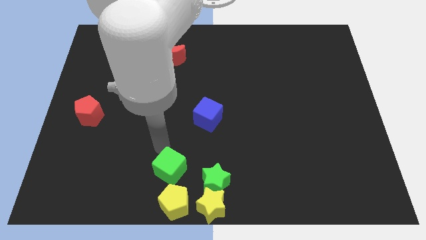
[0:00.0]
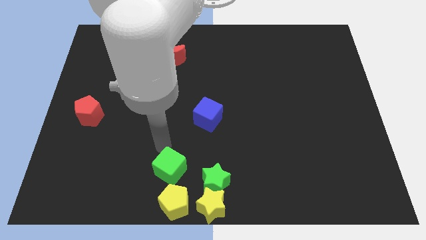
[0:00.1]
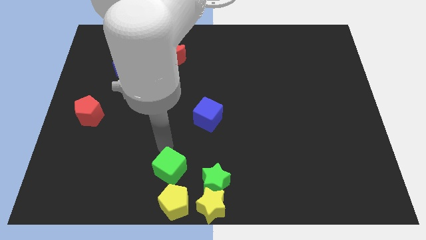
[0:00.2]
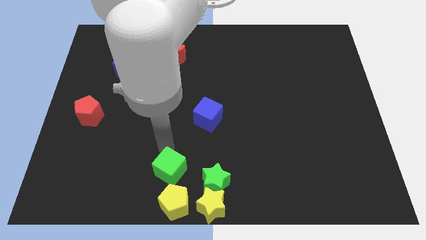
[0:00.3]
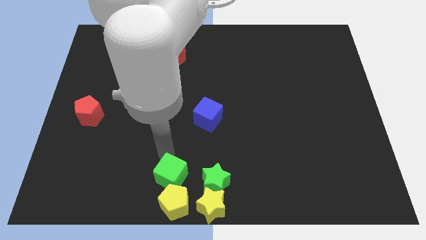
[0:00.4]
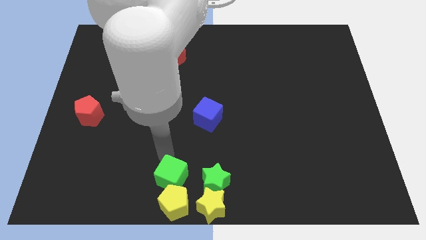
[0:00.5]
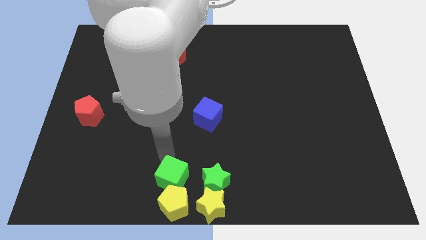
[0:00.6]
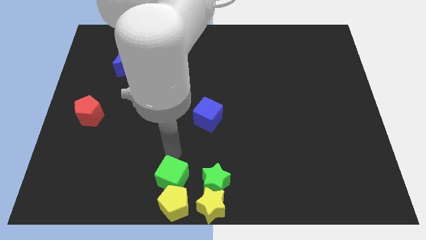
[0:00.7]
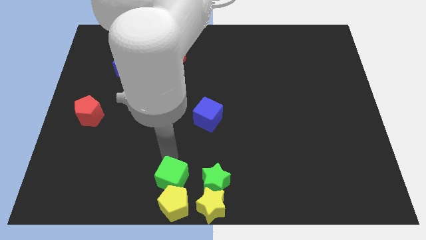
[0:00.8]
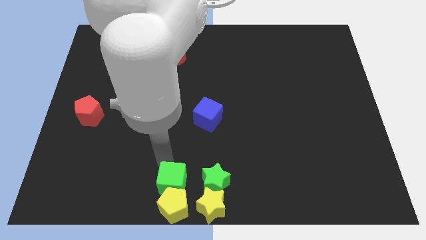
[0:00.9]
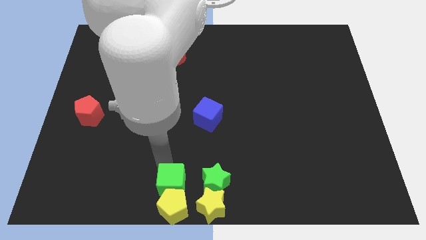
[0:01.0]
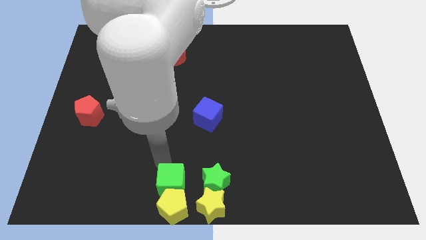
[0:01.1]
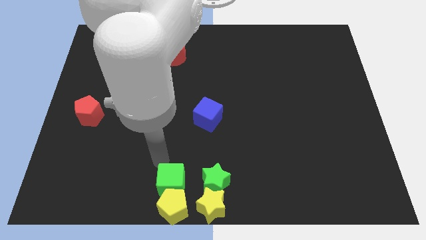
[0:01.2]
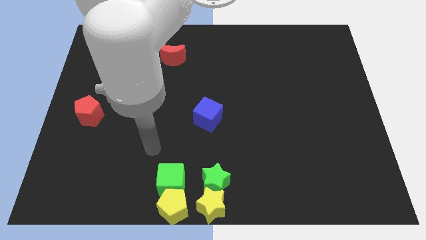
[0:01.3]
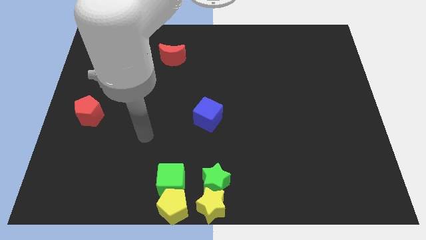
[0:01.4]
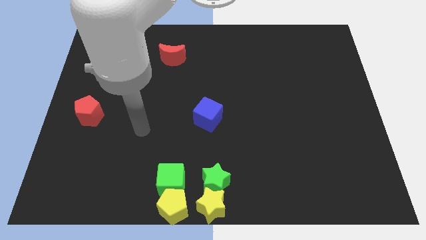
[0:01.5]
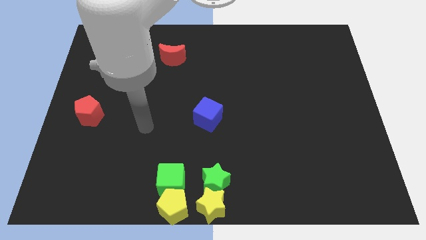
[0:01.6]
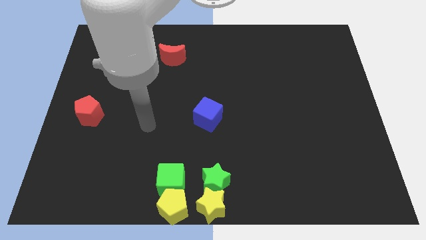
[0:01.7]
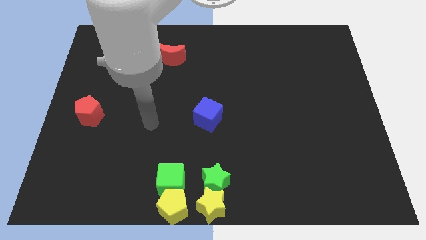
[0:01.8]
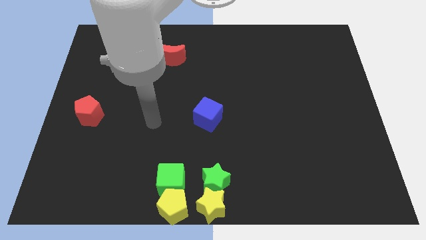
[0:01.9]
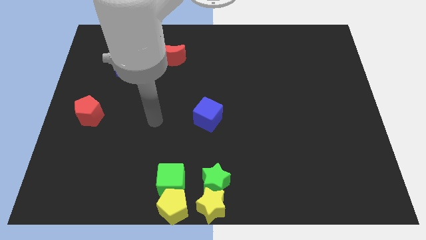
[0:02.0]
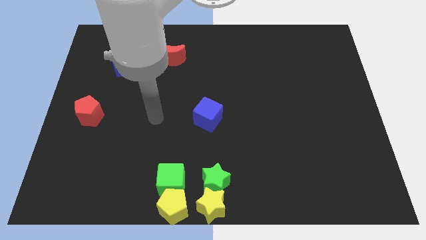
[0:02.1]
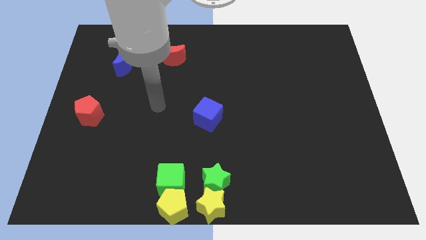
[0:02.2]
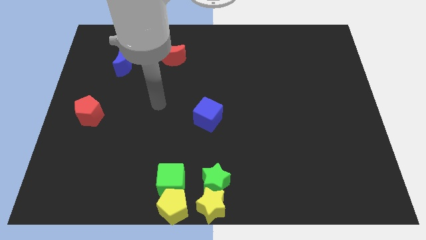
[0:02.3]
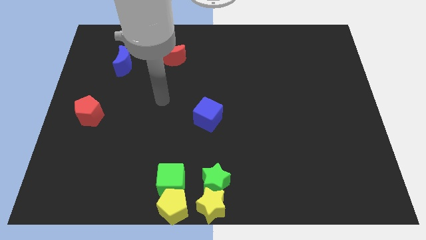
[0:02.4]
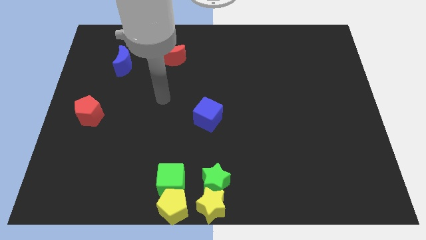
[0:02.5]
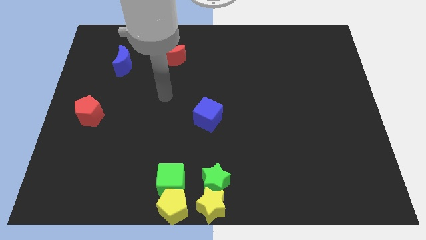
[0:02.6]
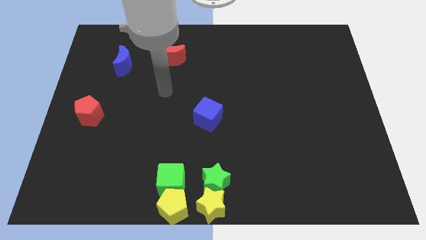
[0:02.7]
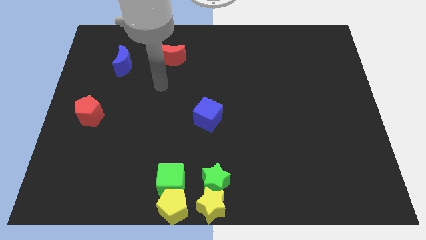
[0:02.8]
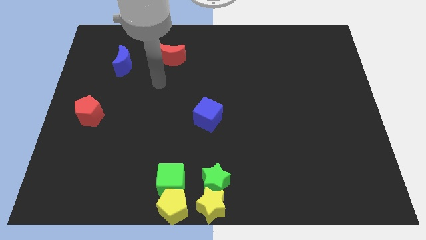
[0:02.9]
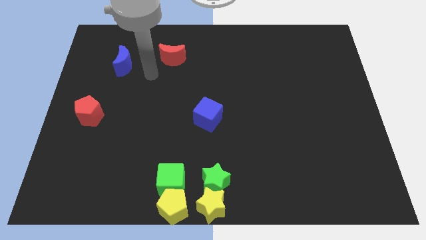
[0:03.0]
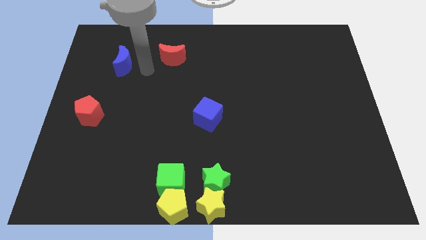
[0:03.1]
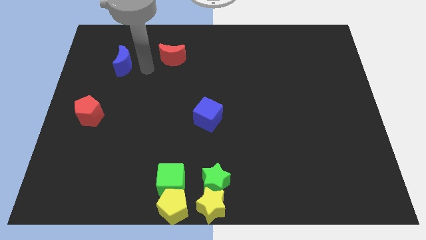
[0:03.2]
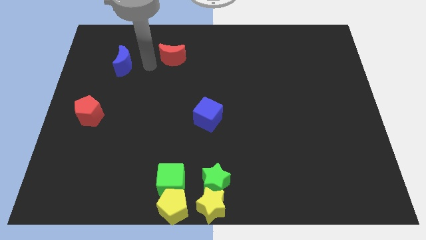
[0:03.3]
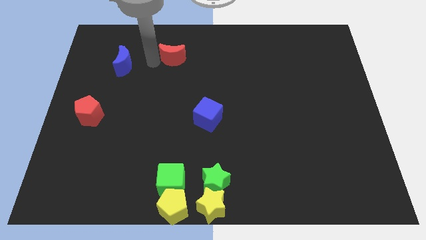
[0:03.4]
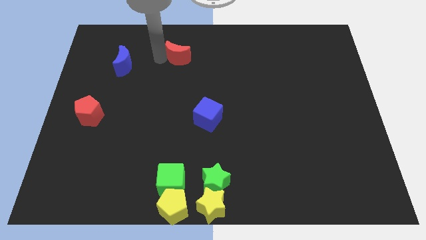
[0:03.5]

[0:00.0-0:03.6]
move the arm to the left of red moon

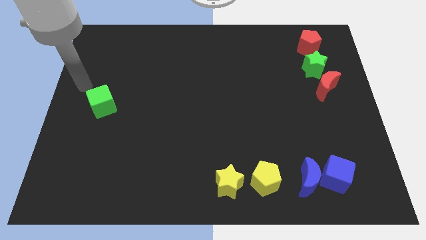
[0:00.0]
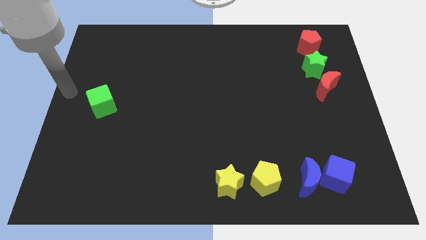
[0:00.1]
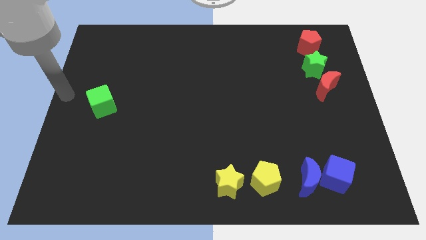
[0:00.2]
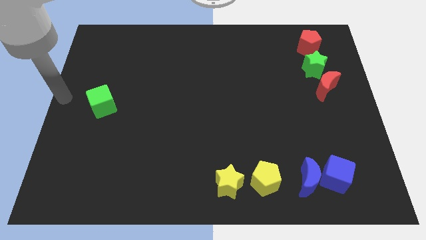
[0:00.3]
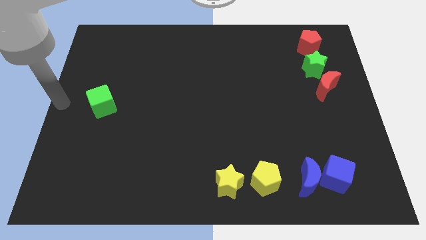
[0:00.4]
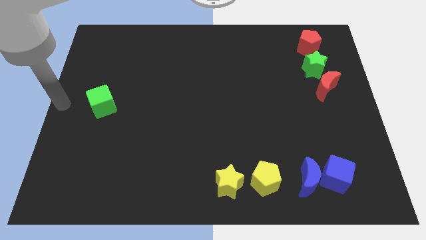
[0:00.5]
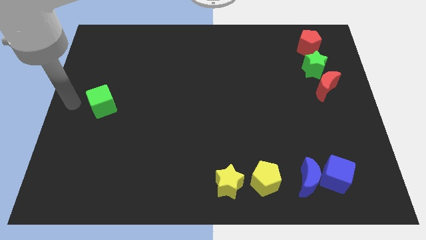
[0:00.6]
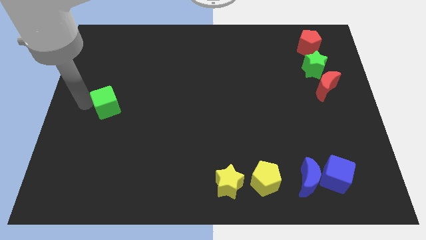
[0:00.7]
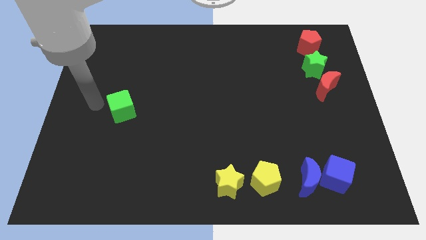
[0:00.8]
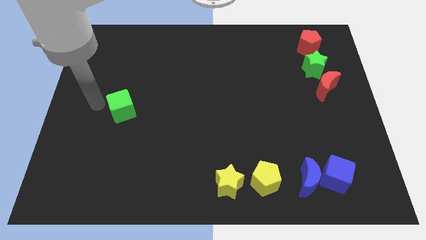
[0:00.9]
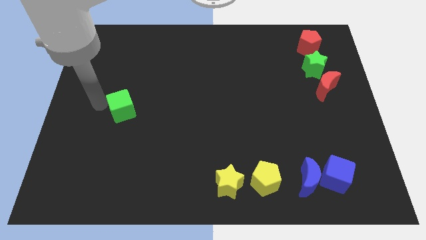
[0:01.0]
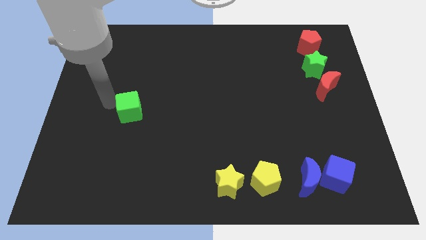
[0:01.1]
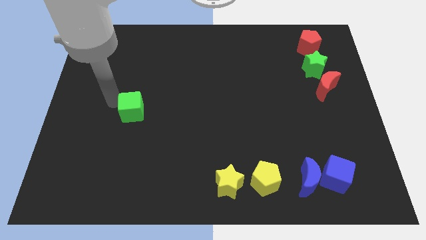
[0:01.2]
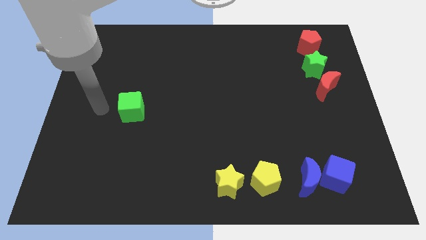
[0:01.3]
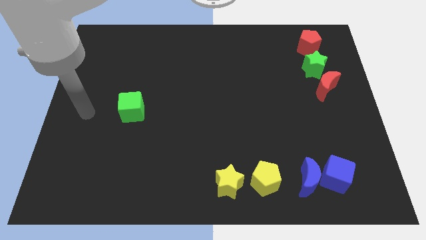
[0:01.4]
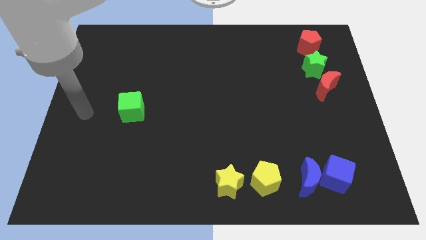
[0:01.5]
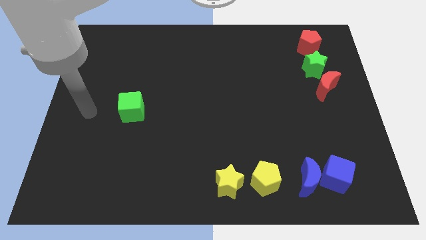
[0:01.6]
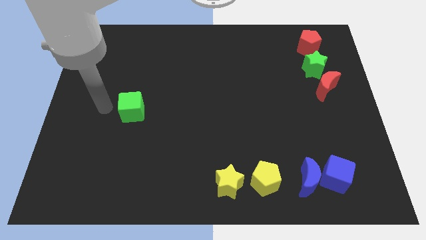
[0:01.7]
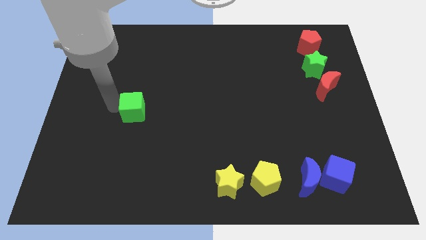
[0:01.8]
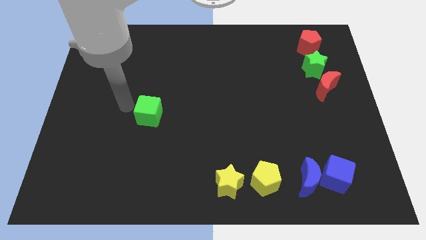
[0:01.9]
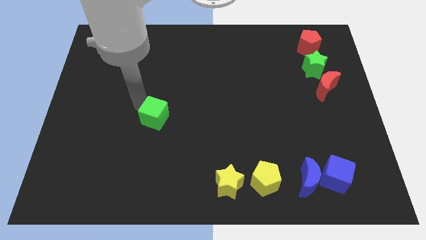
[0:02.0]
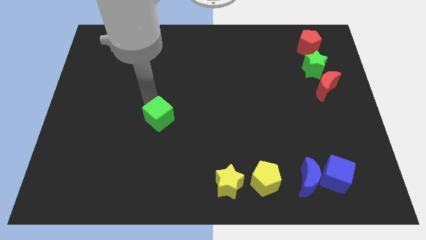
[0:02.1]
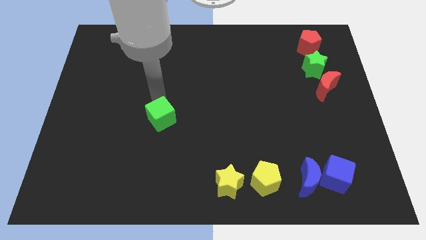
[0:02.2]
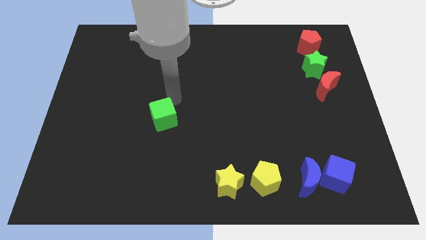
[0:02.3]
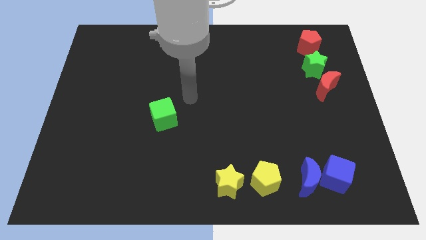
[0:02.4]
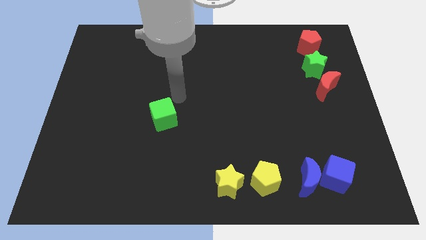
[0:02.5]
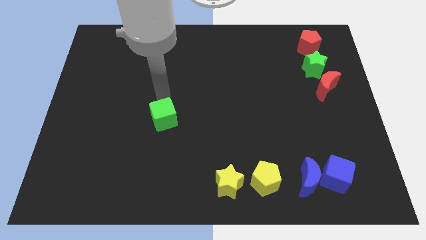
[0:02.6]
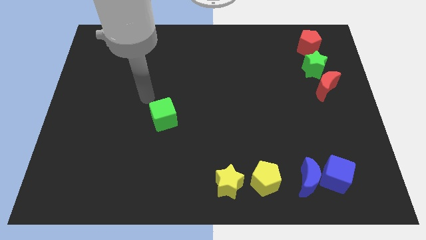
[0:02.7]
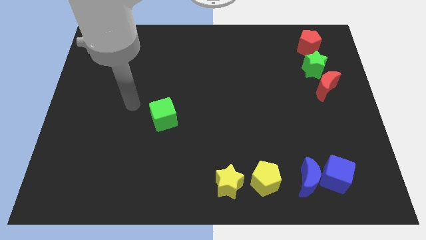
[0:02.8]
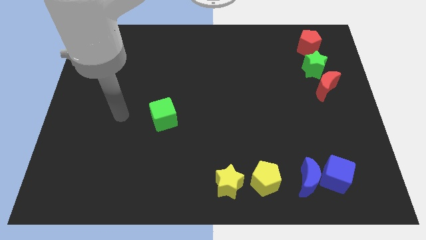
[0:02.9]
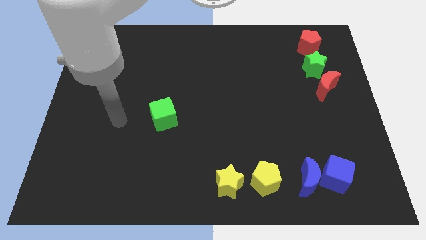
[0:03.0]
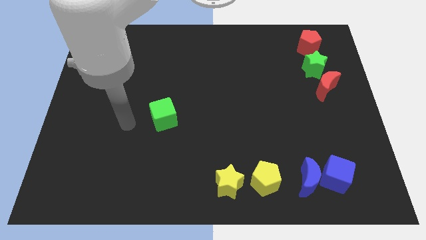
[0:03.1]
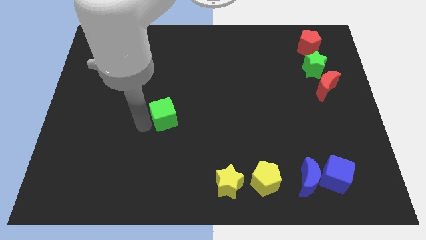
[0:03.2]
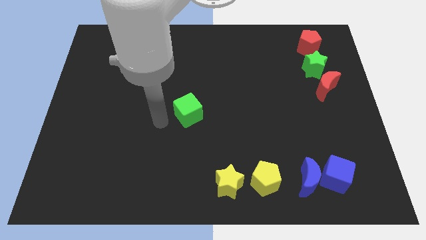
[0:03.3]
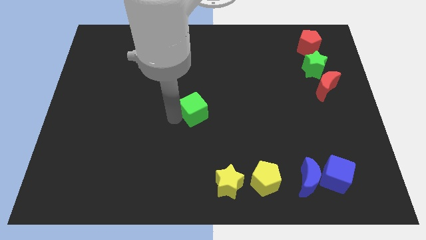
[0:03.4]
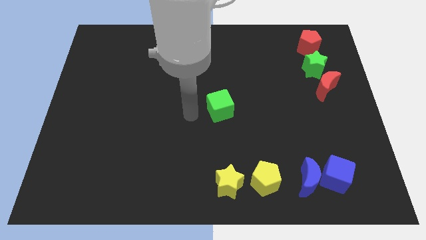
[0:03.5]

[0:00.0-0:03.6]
place green cube at center

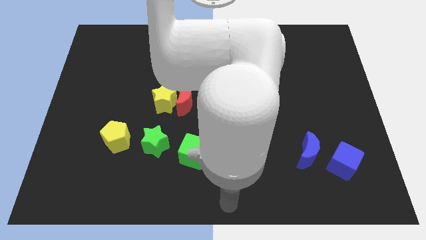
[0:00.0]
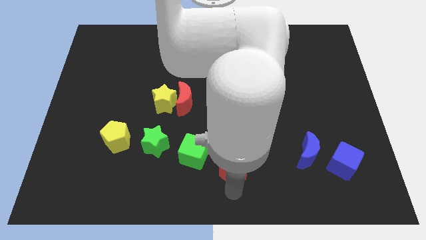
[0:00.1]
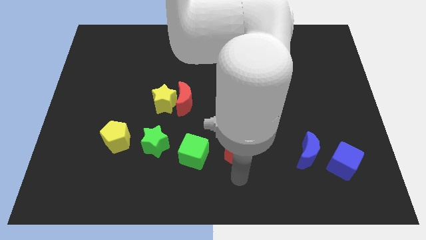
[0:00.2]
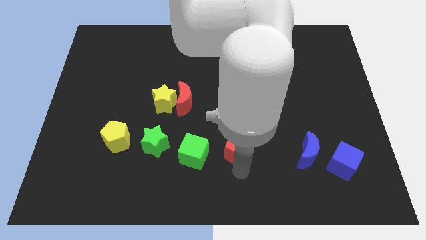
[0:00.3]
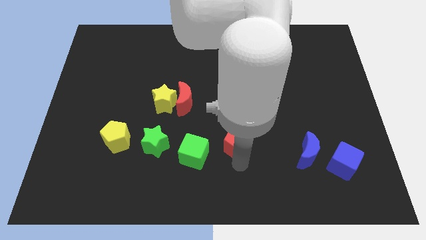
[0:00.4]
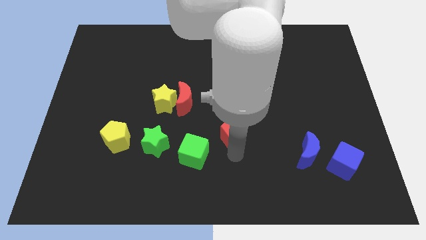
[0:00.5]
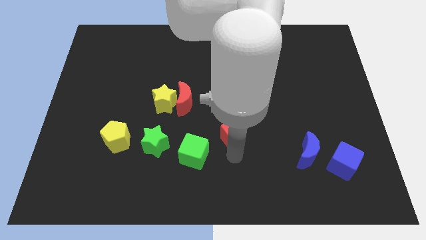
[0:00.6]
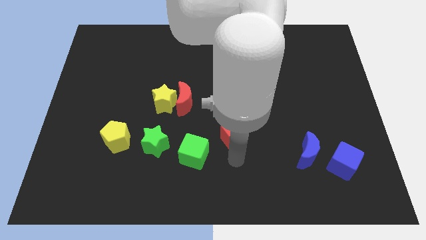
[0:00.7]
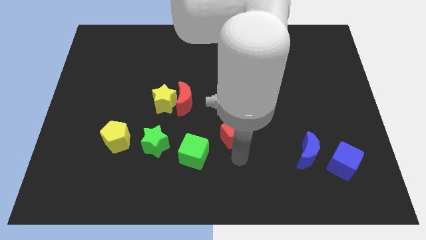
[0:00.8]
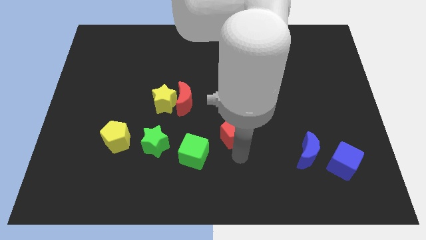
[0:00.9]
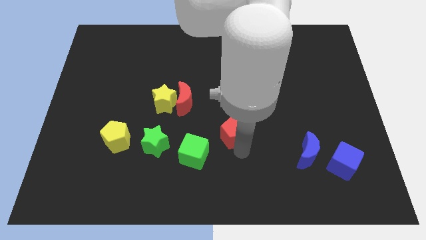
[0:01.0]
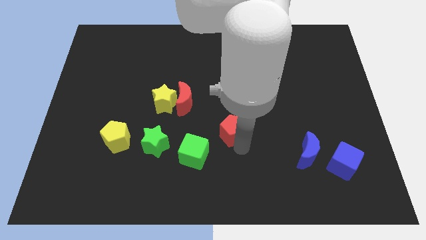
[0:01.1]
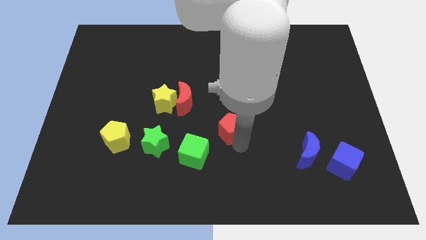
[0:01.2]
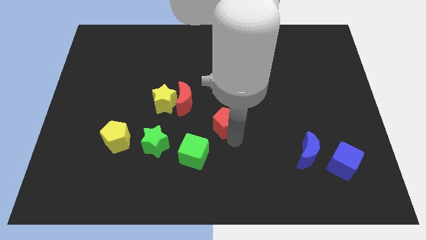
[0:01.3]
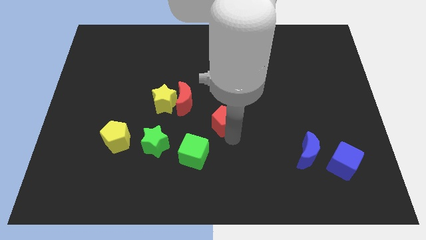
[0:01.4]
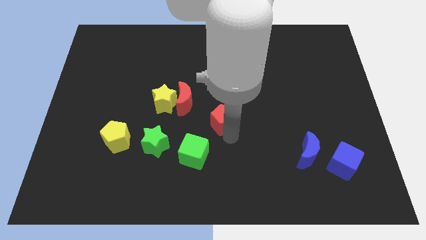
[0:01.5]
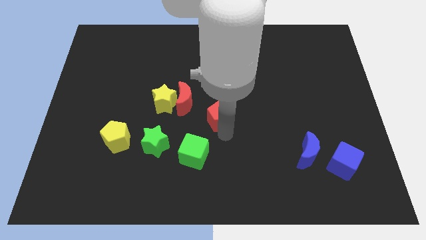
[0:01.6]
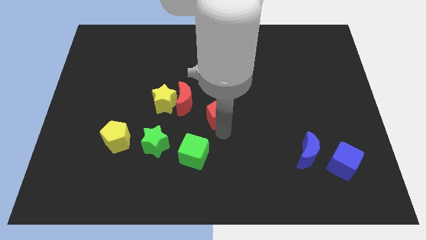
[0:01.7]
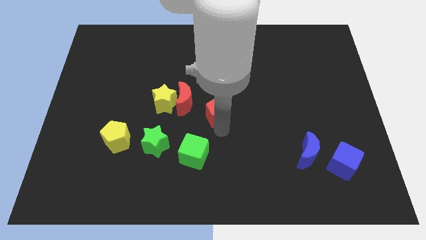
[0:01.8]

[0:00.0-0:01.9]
place the red pentagon towards the red crescent
